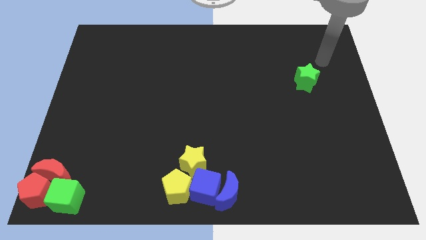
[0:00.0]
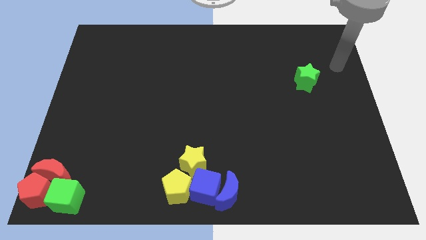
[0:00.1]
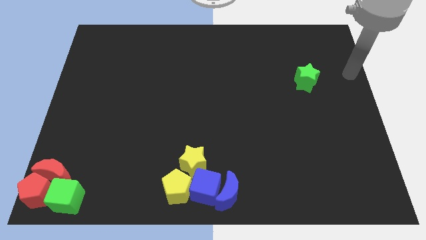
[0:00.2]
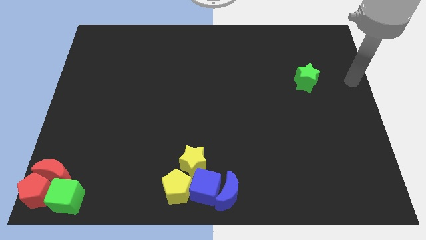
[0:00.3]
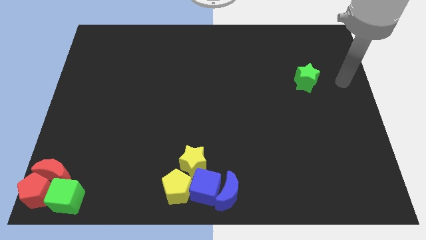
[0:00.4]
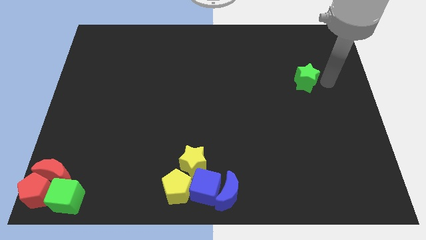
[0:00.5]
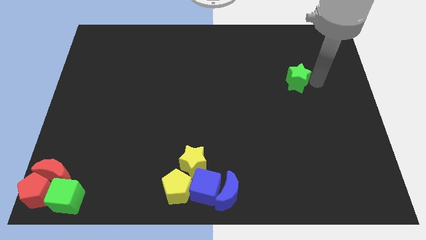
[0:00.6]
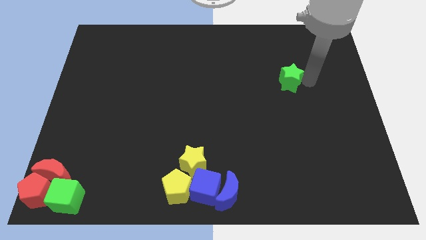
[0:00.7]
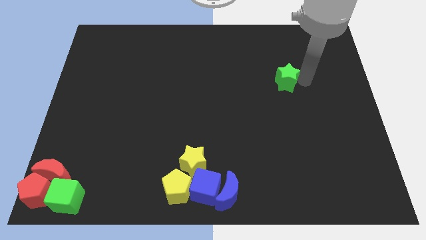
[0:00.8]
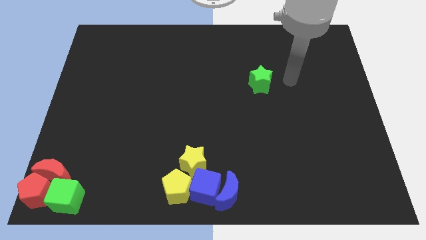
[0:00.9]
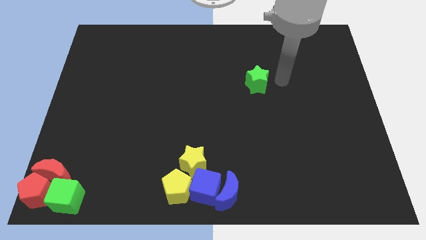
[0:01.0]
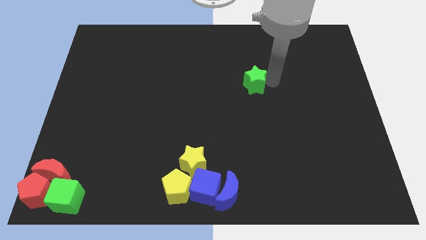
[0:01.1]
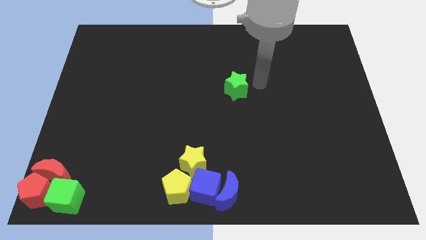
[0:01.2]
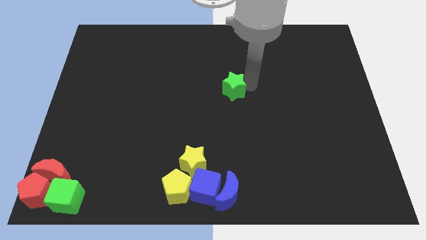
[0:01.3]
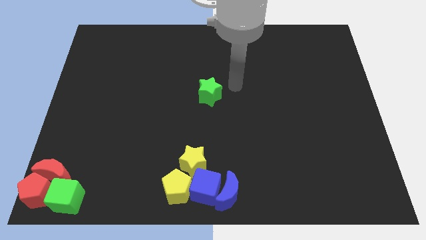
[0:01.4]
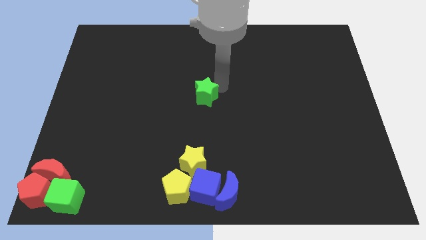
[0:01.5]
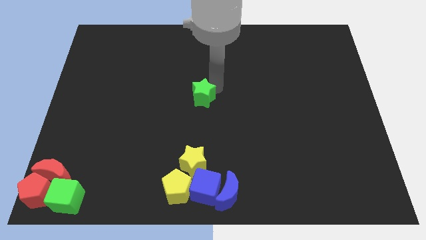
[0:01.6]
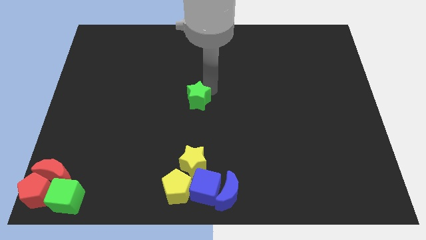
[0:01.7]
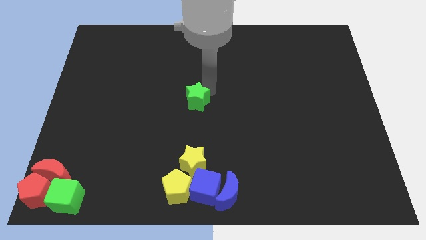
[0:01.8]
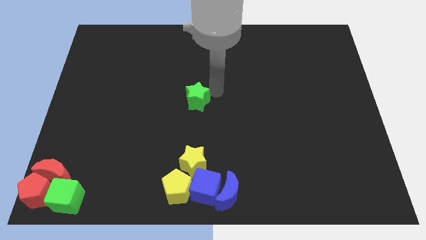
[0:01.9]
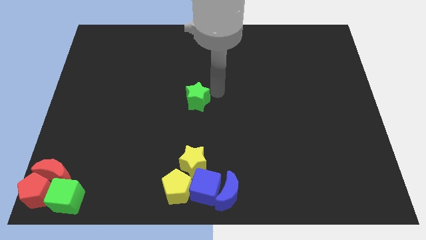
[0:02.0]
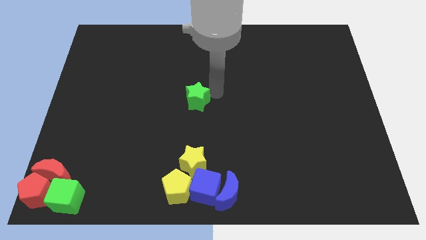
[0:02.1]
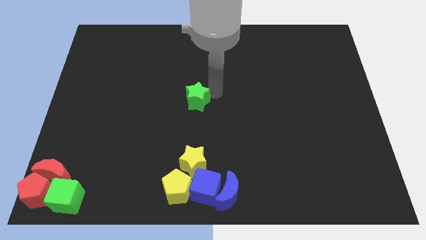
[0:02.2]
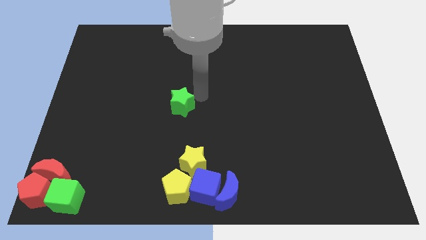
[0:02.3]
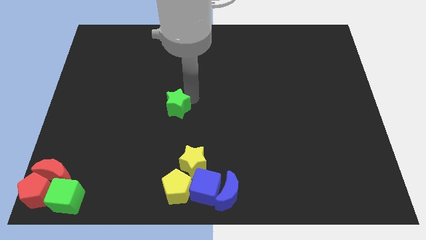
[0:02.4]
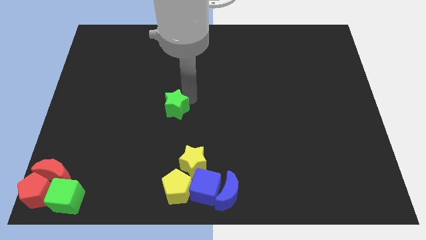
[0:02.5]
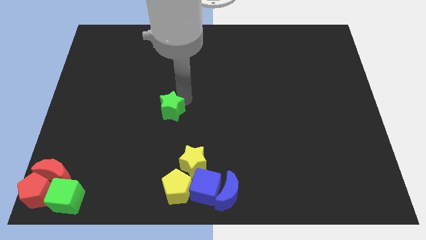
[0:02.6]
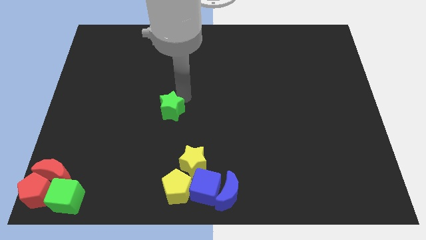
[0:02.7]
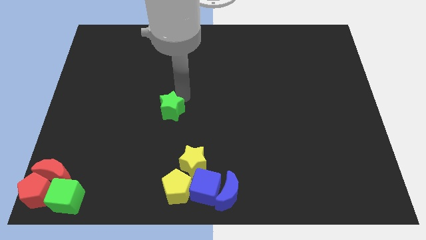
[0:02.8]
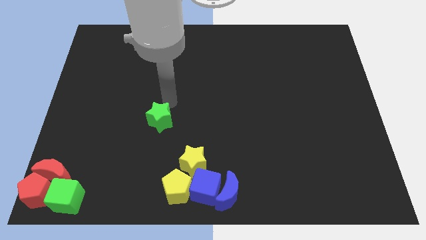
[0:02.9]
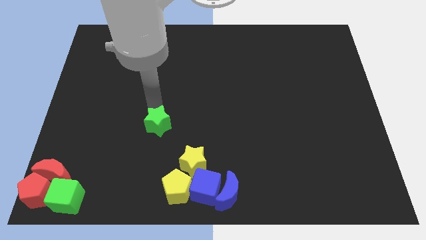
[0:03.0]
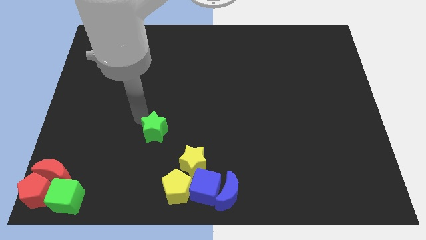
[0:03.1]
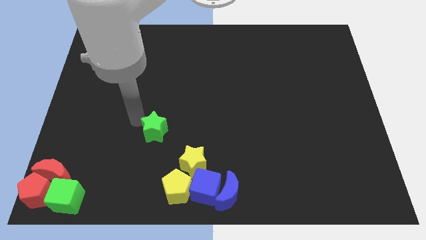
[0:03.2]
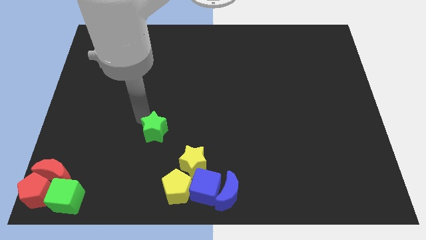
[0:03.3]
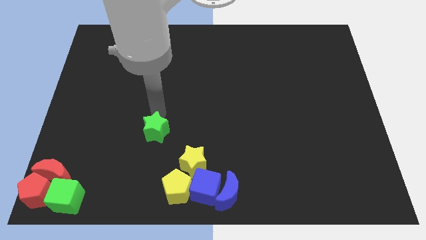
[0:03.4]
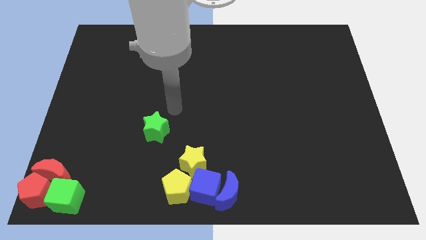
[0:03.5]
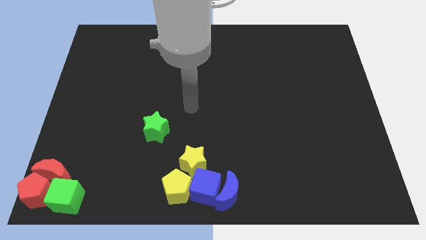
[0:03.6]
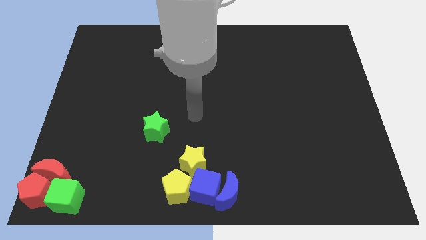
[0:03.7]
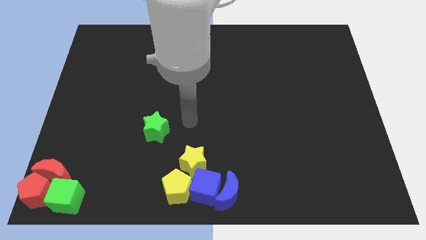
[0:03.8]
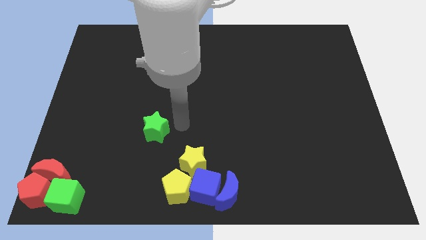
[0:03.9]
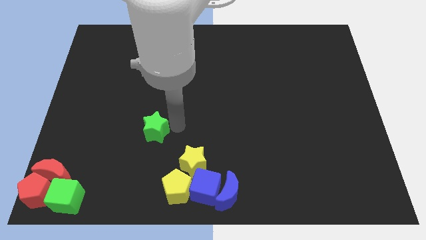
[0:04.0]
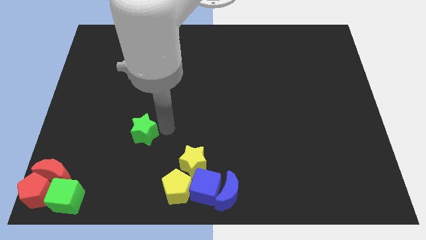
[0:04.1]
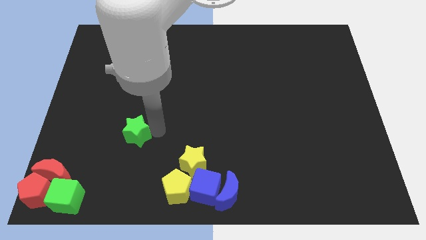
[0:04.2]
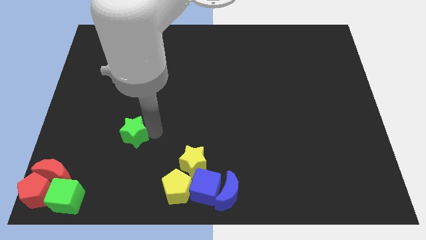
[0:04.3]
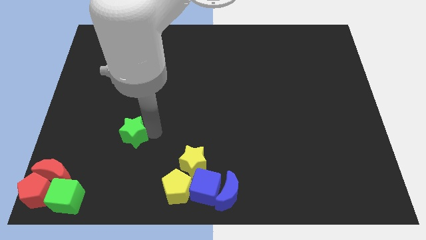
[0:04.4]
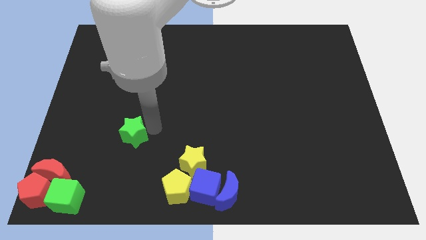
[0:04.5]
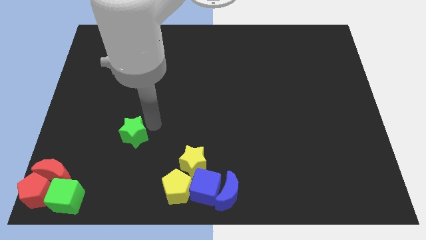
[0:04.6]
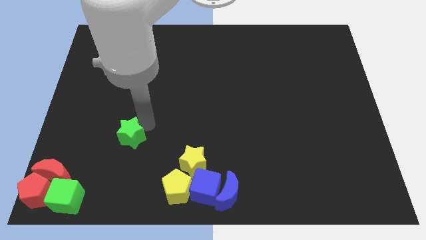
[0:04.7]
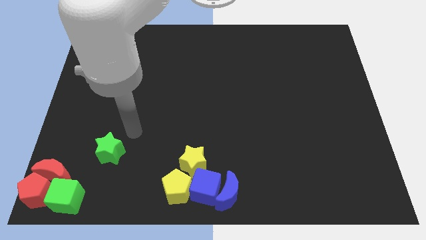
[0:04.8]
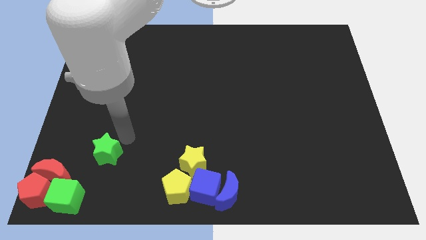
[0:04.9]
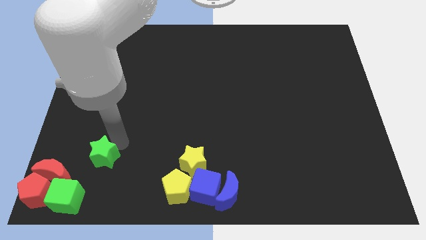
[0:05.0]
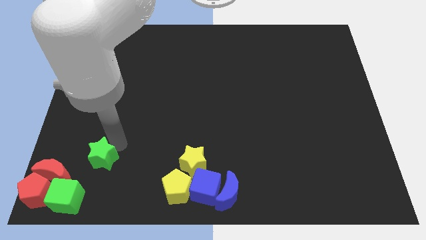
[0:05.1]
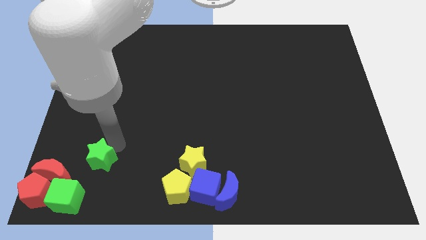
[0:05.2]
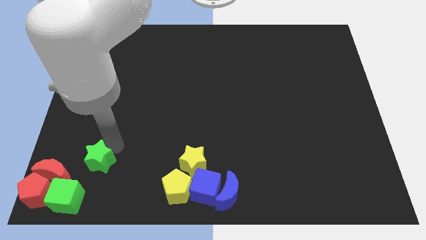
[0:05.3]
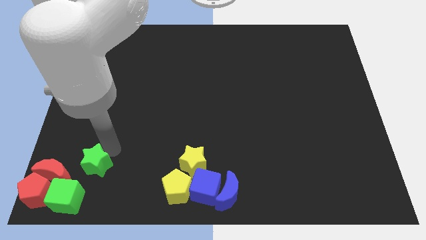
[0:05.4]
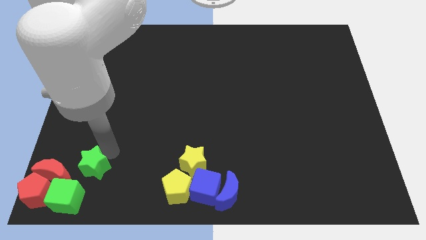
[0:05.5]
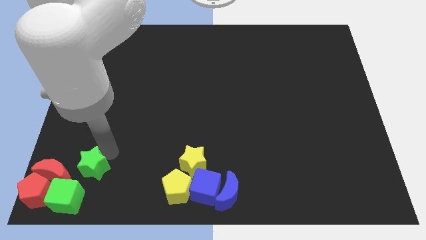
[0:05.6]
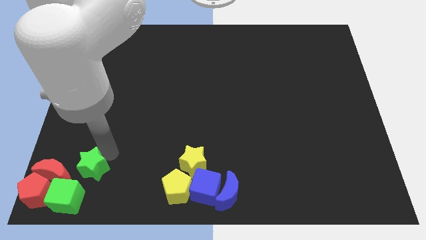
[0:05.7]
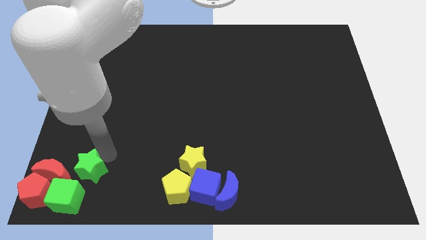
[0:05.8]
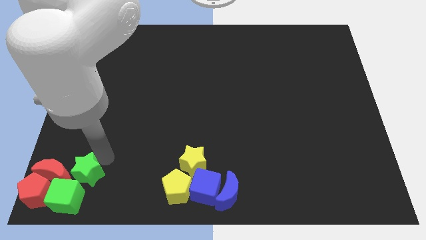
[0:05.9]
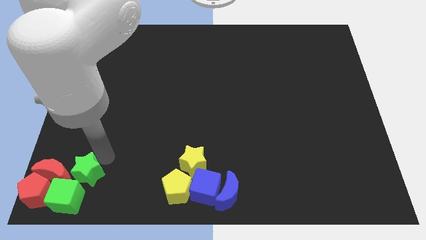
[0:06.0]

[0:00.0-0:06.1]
move the green star close to the group of blocks

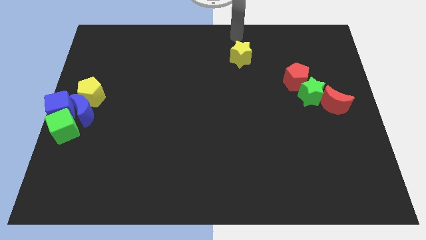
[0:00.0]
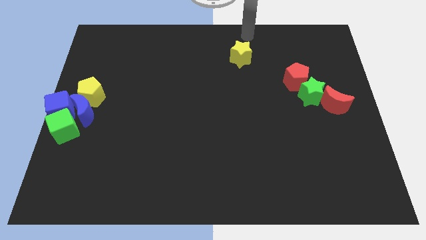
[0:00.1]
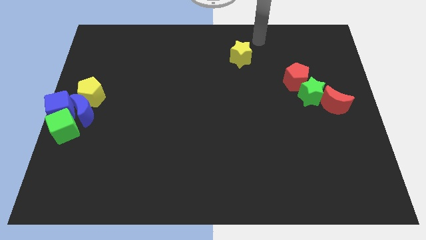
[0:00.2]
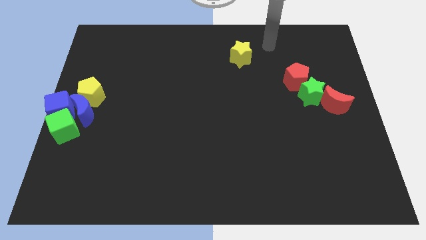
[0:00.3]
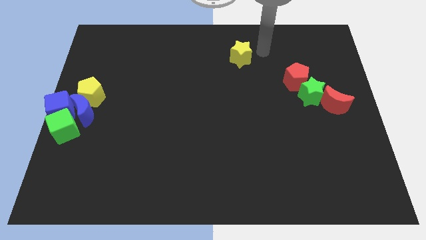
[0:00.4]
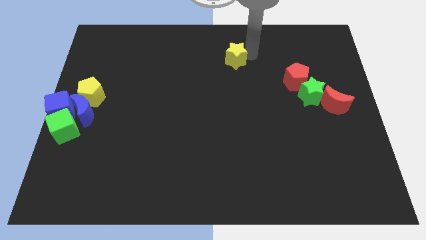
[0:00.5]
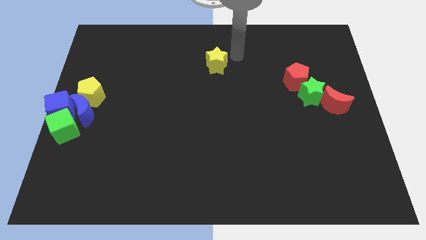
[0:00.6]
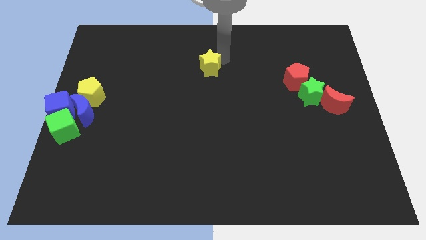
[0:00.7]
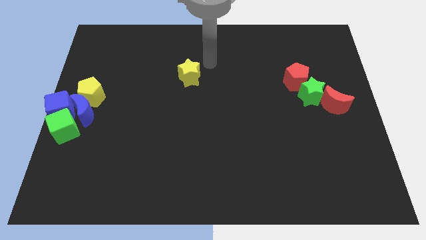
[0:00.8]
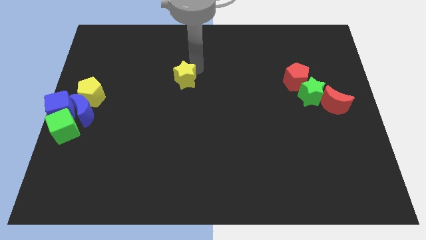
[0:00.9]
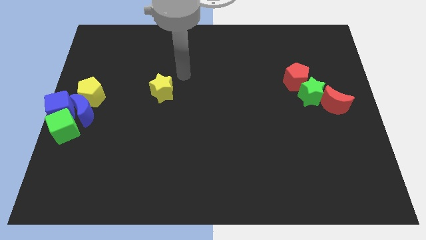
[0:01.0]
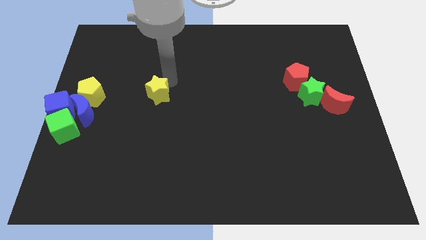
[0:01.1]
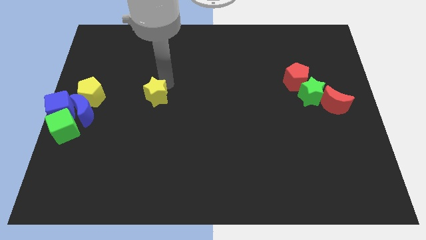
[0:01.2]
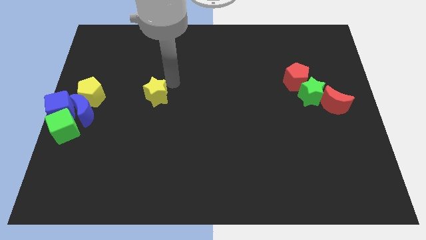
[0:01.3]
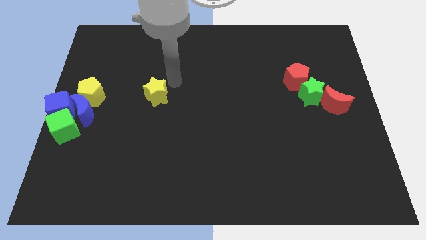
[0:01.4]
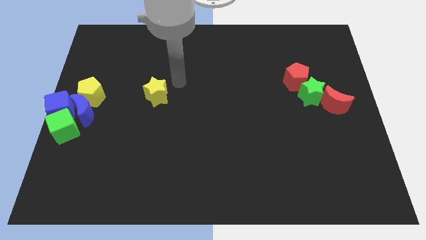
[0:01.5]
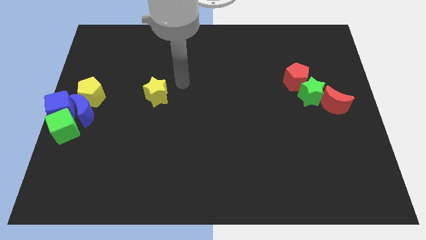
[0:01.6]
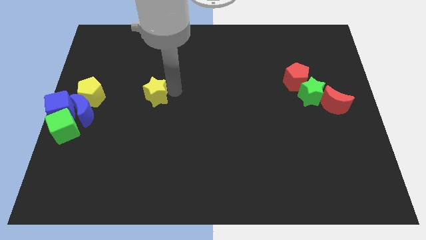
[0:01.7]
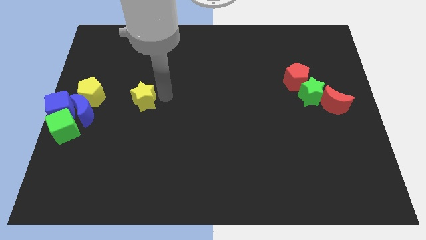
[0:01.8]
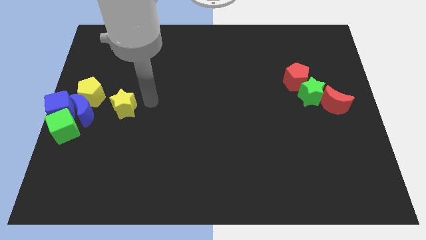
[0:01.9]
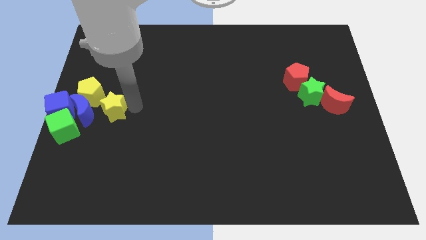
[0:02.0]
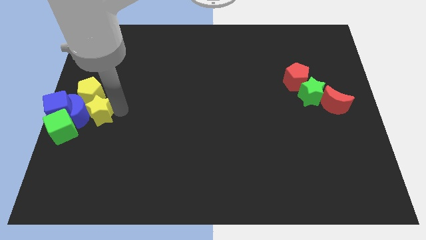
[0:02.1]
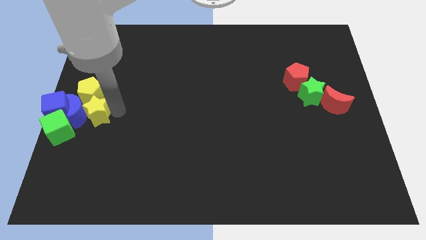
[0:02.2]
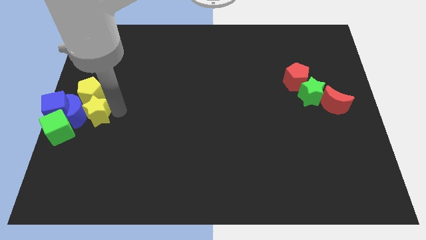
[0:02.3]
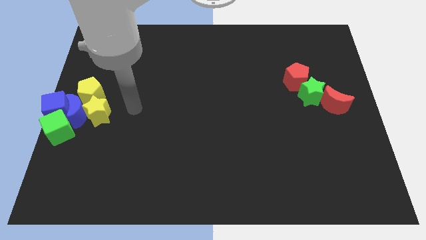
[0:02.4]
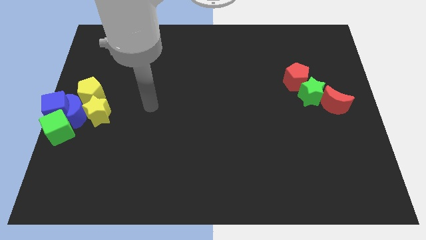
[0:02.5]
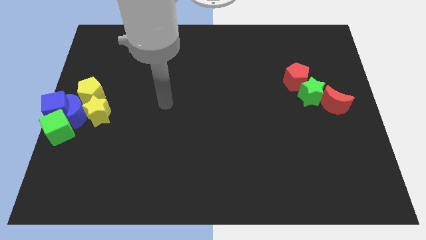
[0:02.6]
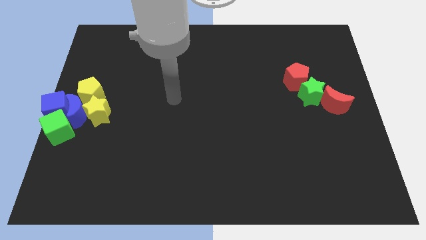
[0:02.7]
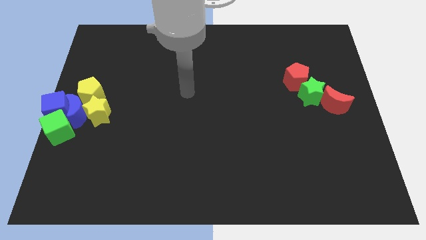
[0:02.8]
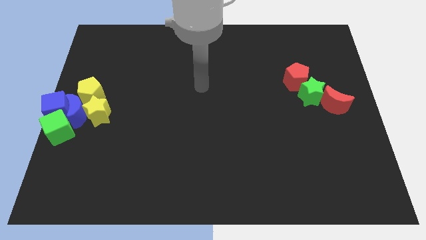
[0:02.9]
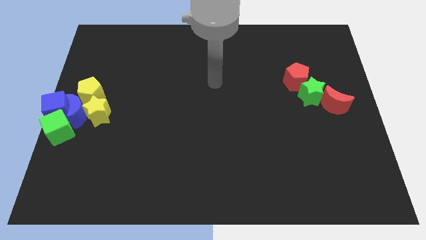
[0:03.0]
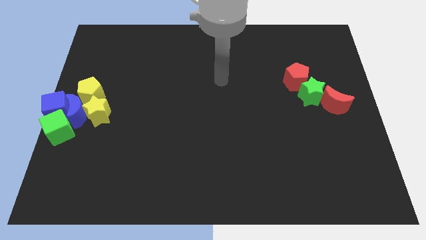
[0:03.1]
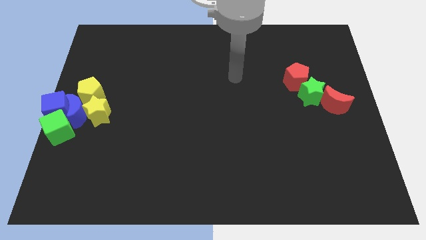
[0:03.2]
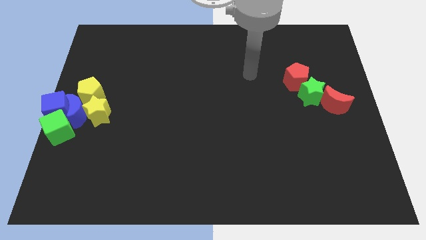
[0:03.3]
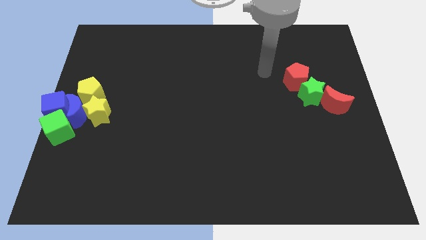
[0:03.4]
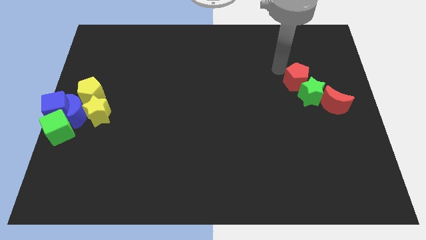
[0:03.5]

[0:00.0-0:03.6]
move the yellow star into the blue moon
